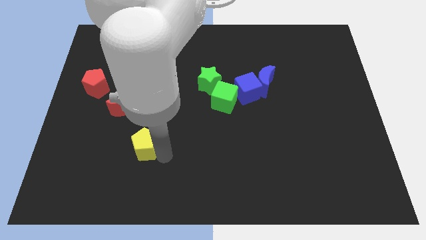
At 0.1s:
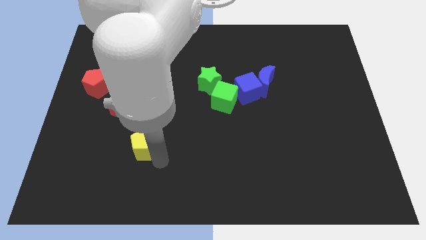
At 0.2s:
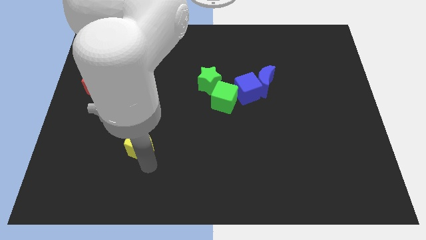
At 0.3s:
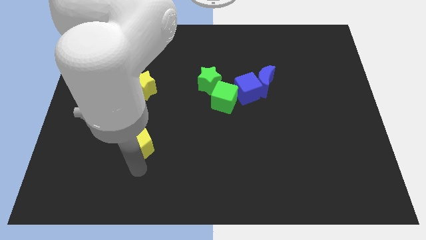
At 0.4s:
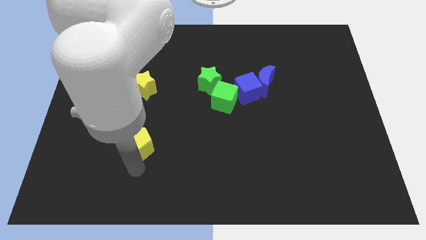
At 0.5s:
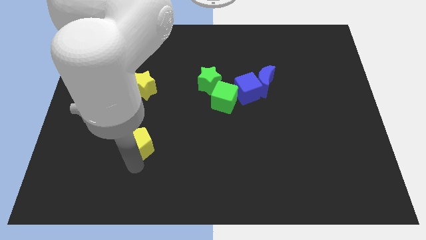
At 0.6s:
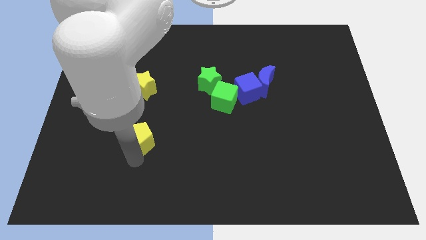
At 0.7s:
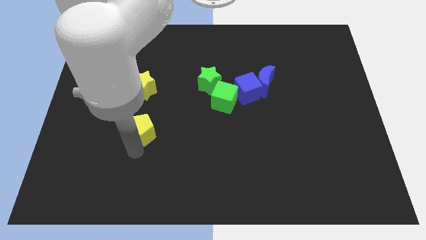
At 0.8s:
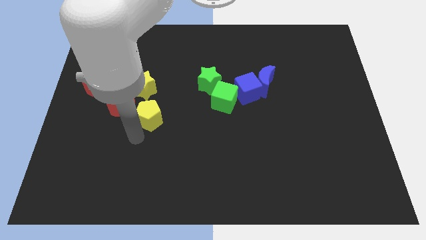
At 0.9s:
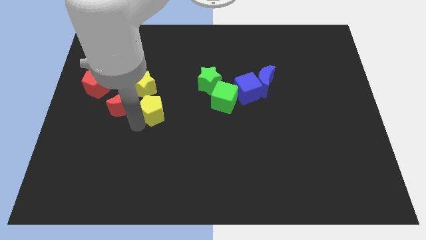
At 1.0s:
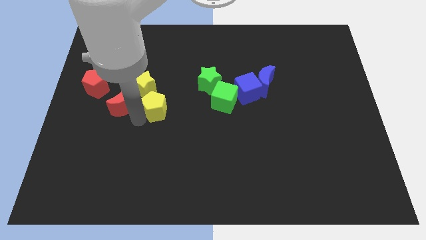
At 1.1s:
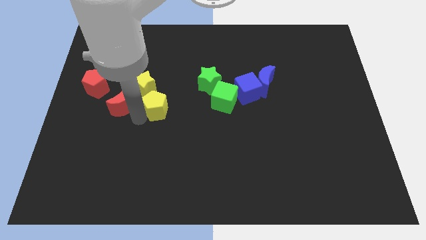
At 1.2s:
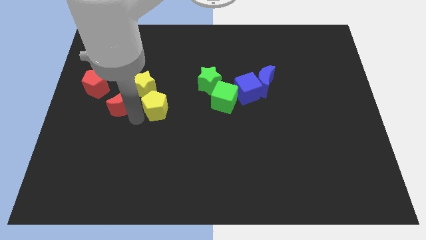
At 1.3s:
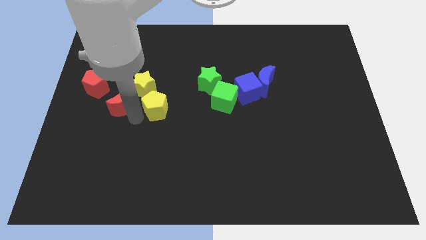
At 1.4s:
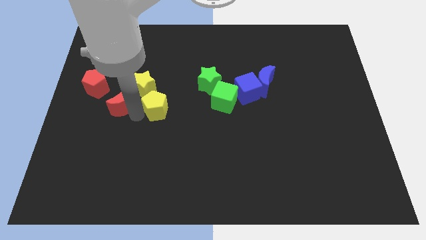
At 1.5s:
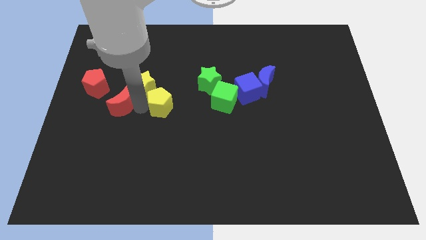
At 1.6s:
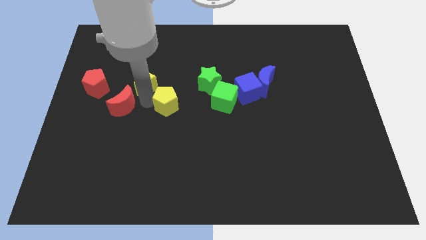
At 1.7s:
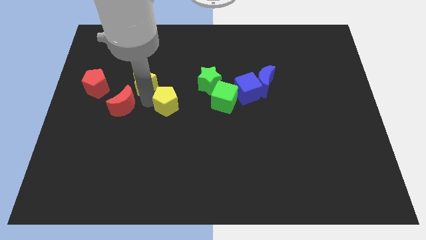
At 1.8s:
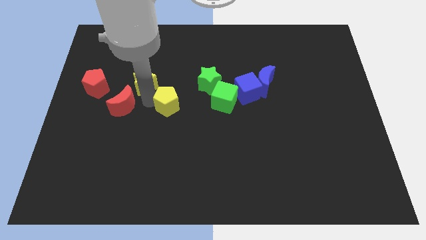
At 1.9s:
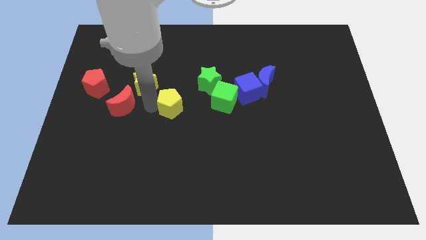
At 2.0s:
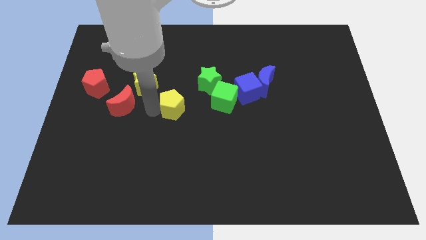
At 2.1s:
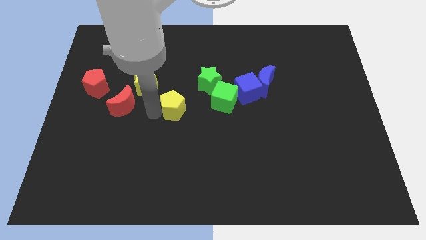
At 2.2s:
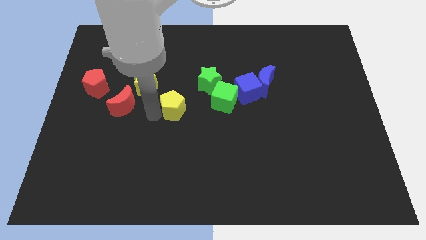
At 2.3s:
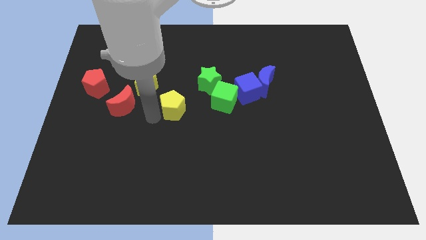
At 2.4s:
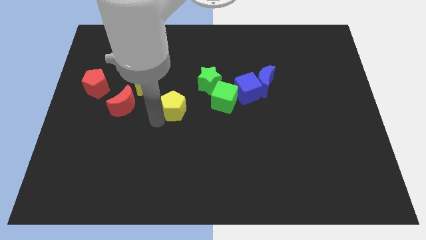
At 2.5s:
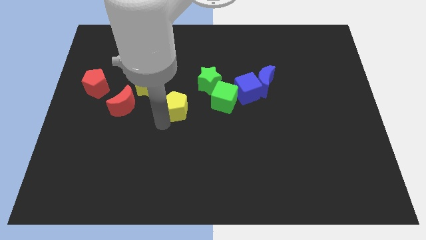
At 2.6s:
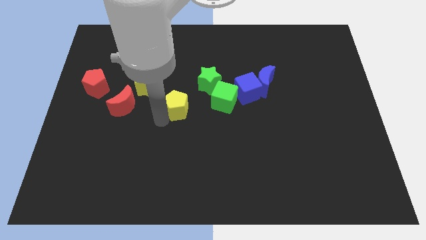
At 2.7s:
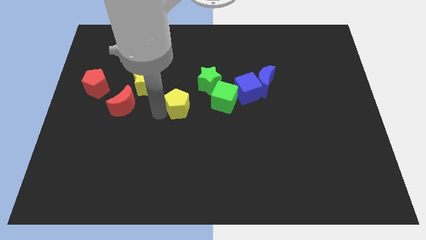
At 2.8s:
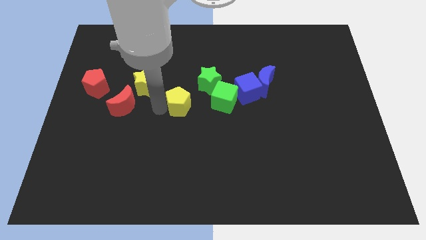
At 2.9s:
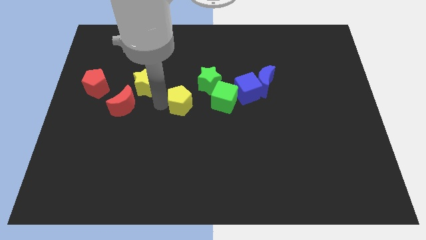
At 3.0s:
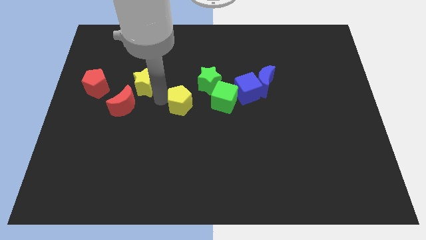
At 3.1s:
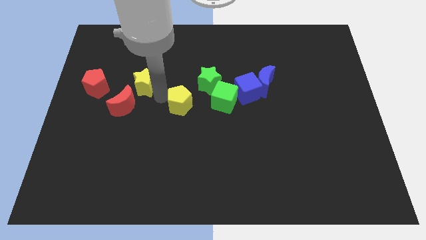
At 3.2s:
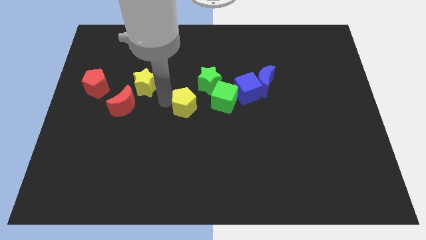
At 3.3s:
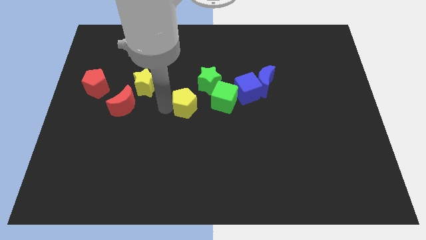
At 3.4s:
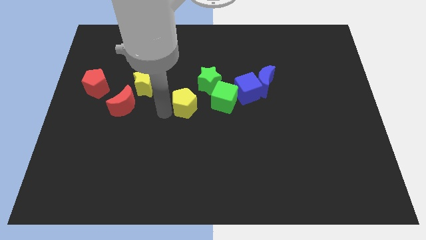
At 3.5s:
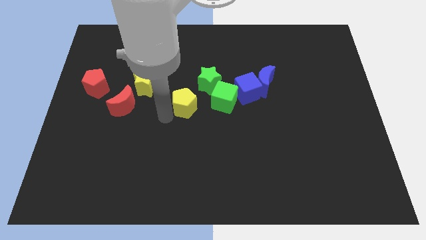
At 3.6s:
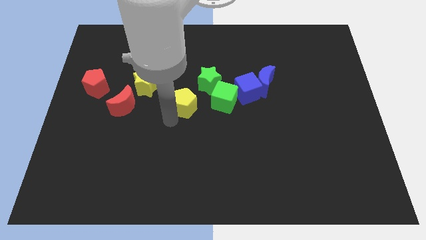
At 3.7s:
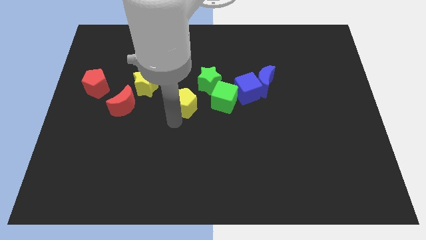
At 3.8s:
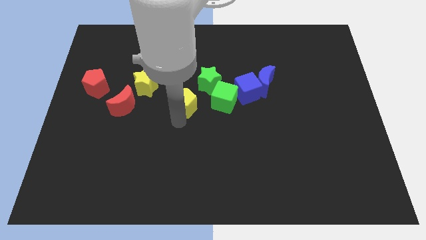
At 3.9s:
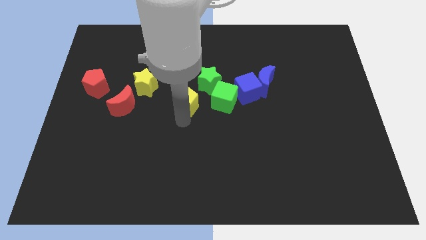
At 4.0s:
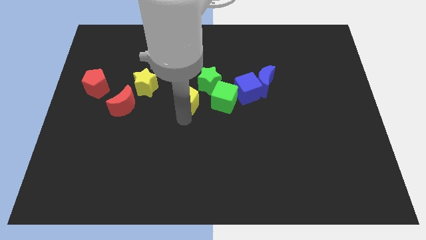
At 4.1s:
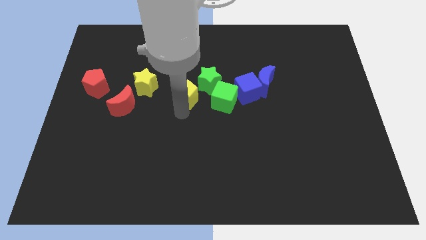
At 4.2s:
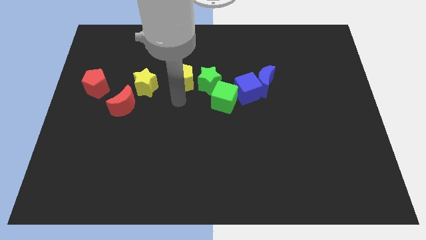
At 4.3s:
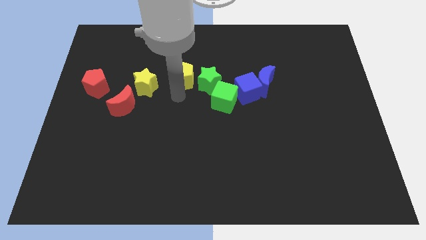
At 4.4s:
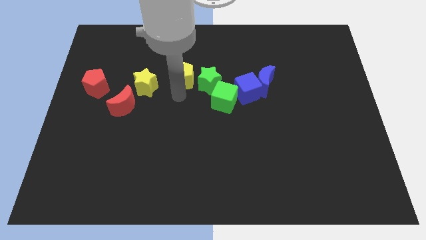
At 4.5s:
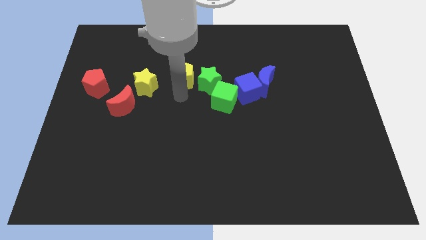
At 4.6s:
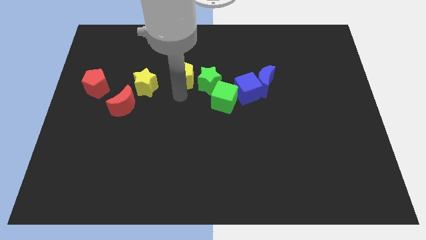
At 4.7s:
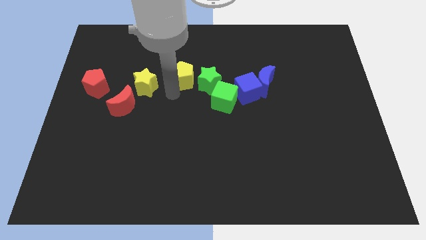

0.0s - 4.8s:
place yellow pentagon to the left of green star

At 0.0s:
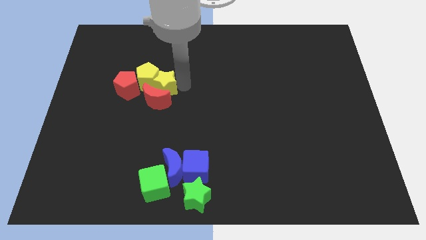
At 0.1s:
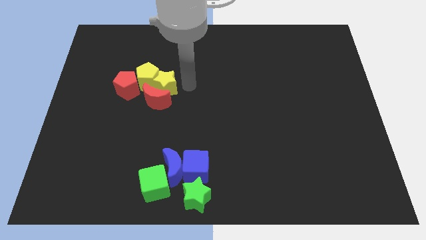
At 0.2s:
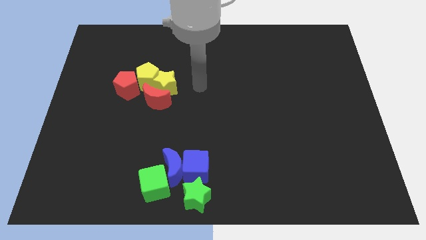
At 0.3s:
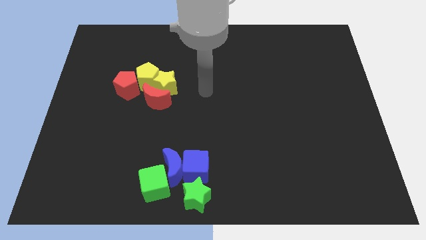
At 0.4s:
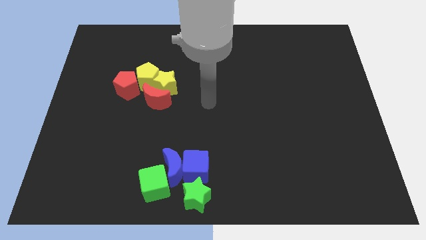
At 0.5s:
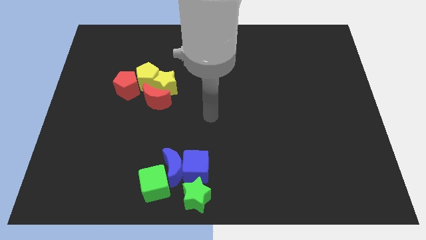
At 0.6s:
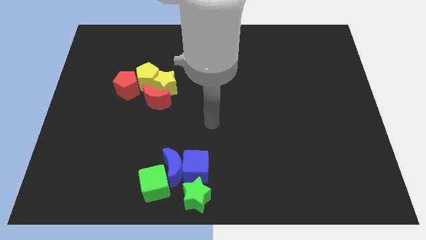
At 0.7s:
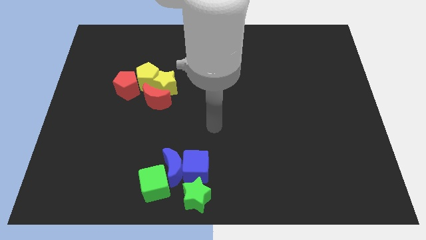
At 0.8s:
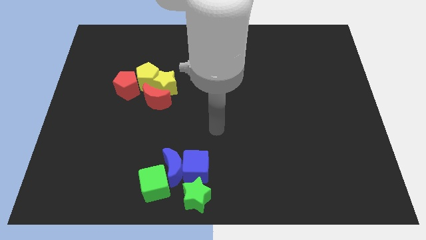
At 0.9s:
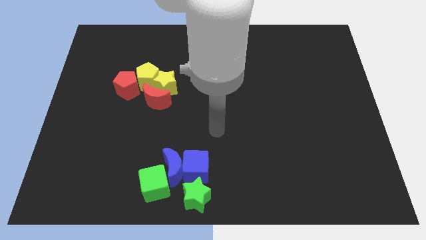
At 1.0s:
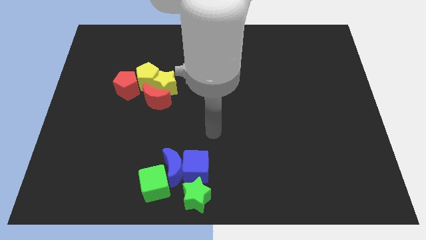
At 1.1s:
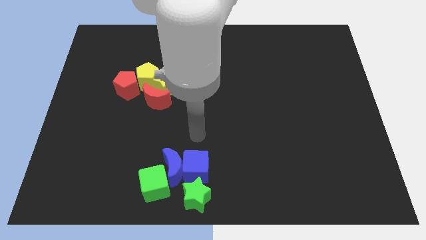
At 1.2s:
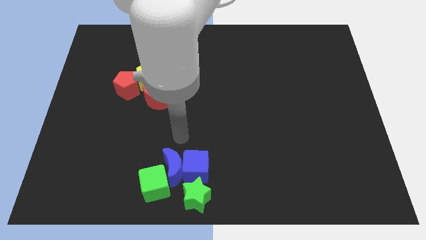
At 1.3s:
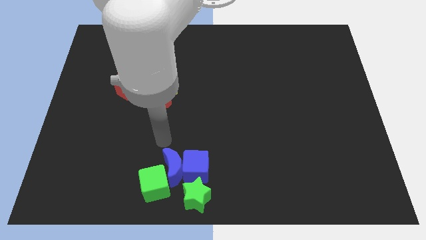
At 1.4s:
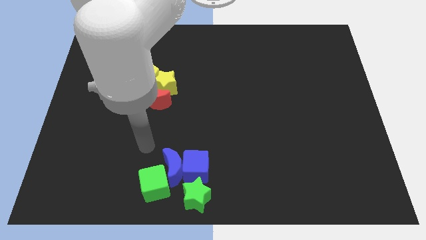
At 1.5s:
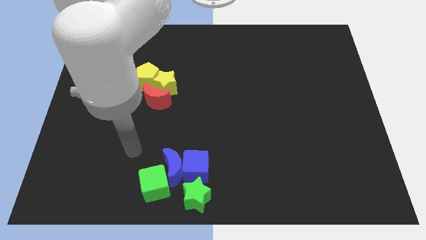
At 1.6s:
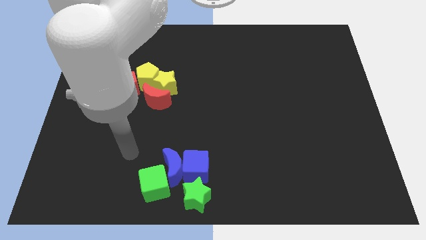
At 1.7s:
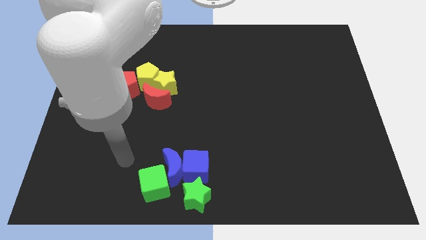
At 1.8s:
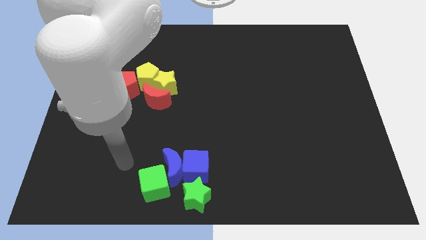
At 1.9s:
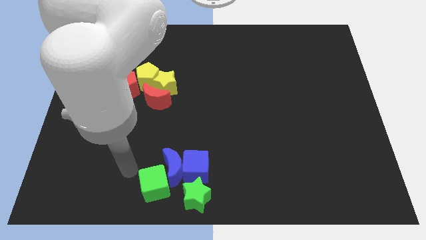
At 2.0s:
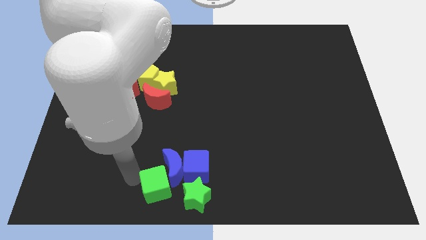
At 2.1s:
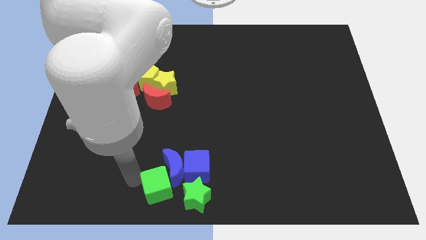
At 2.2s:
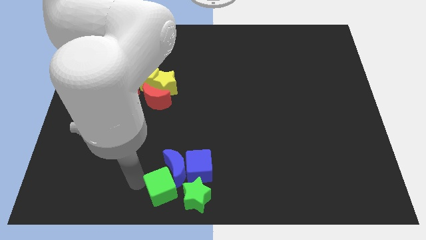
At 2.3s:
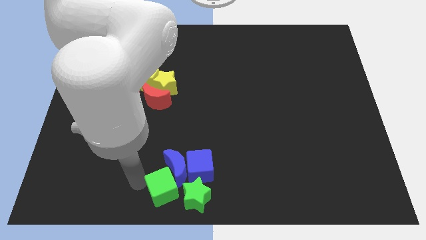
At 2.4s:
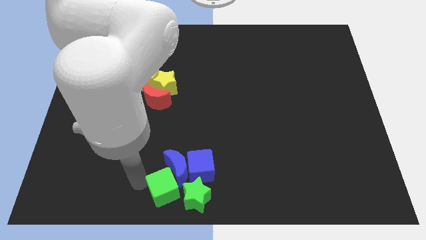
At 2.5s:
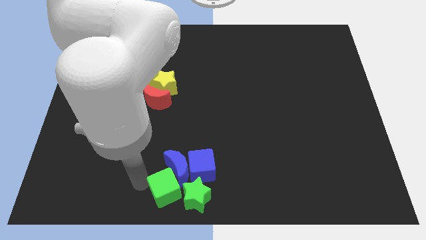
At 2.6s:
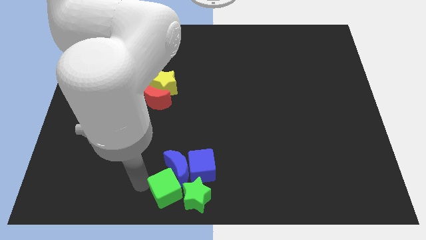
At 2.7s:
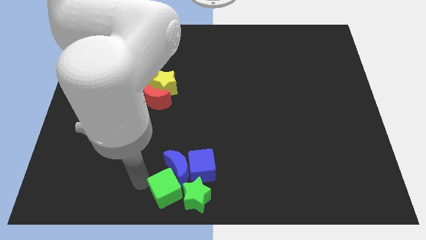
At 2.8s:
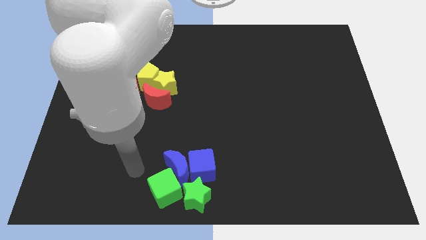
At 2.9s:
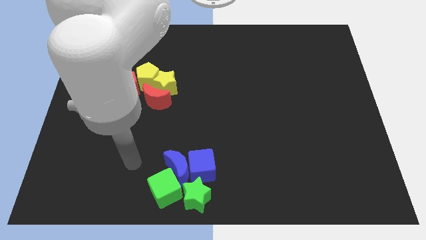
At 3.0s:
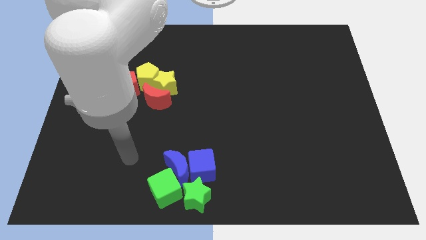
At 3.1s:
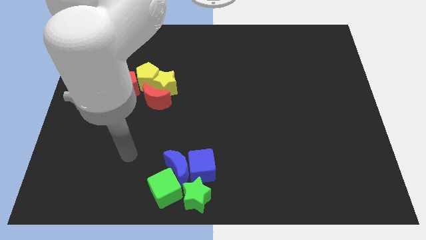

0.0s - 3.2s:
move your arm away from the yellow star

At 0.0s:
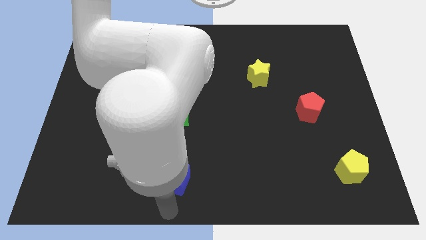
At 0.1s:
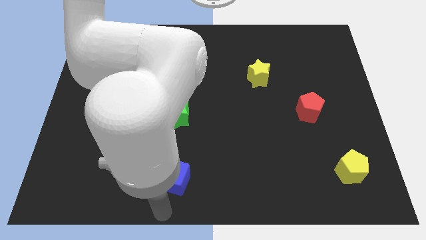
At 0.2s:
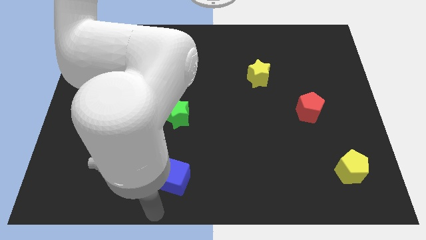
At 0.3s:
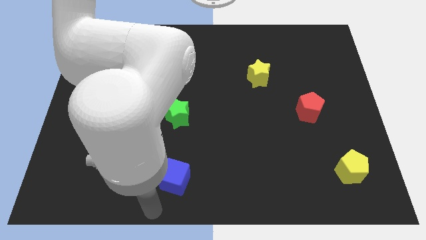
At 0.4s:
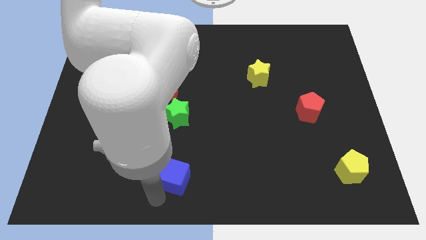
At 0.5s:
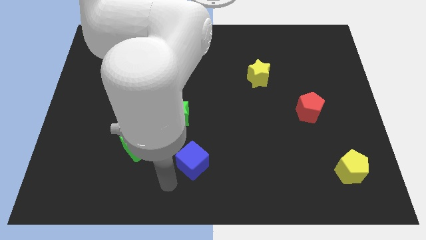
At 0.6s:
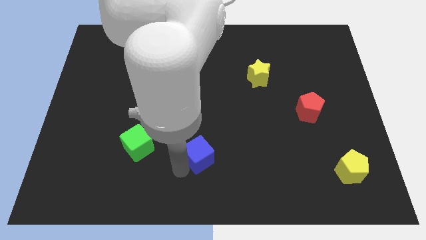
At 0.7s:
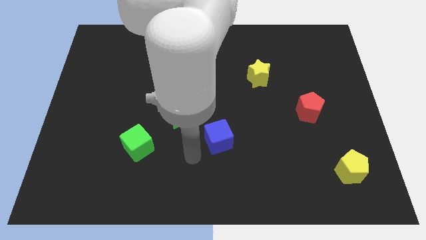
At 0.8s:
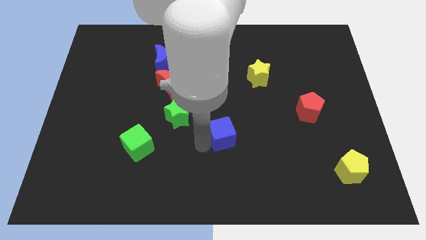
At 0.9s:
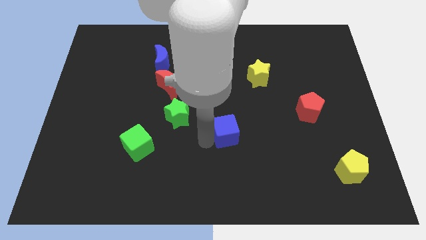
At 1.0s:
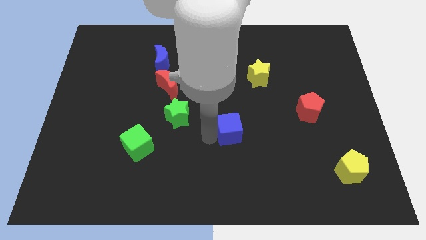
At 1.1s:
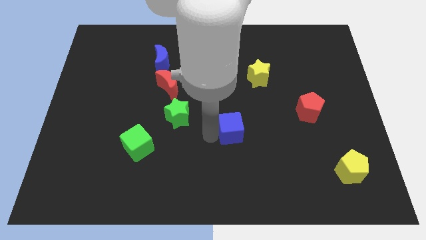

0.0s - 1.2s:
push the blue cube parallel to the green star
